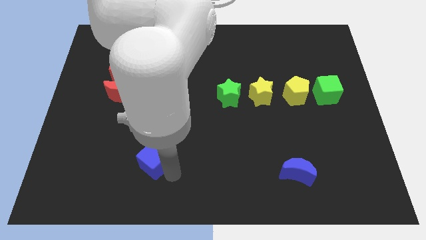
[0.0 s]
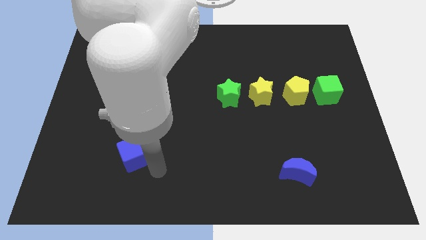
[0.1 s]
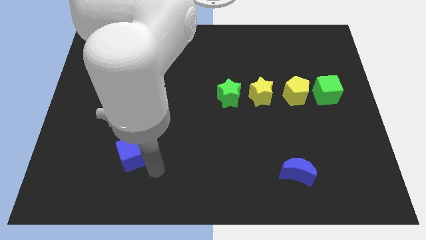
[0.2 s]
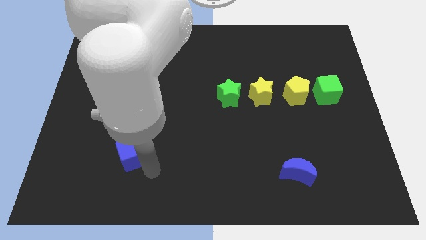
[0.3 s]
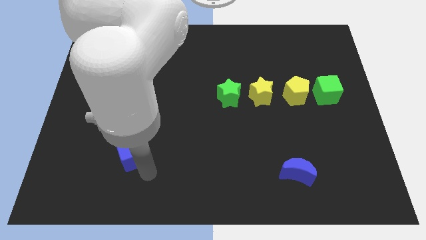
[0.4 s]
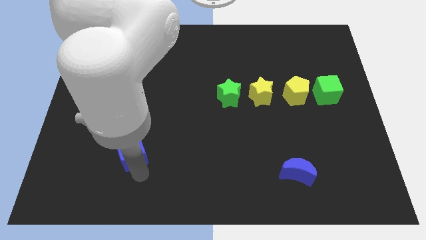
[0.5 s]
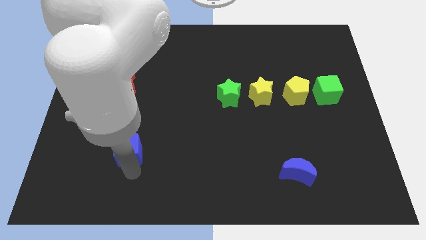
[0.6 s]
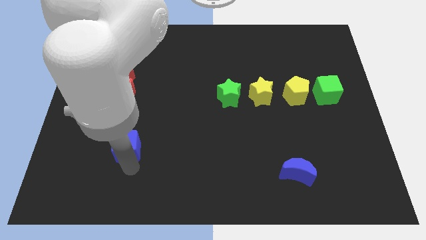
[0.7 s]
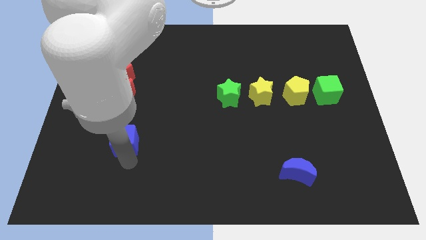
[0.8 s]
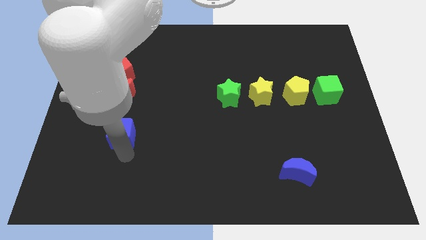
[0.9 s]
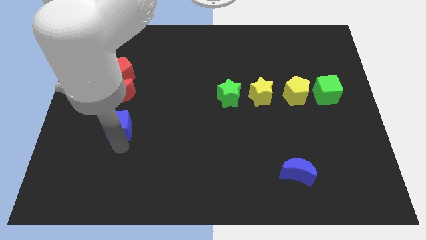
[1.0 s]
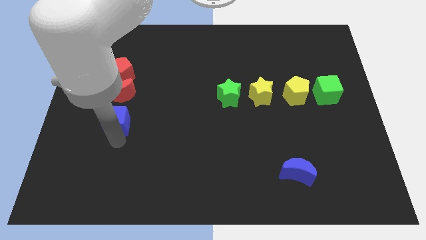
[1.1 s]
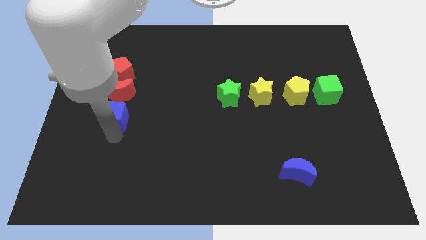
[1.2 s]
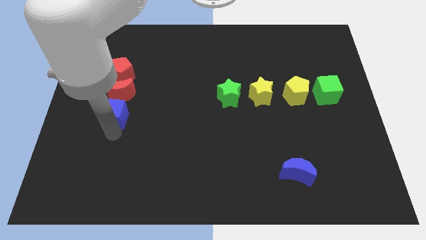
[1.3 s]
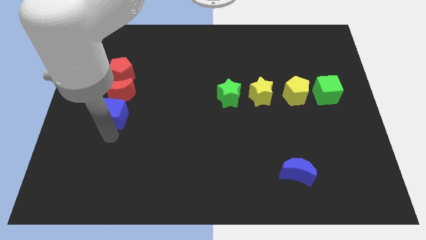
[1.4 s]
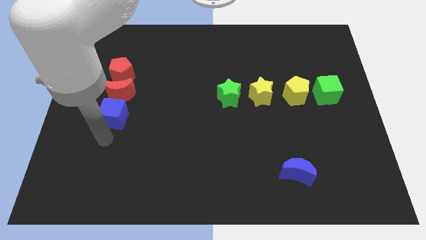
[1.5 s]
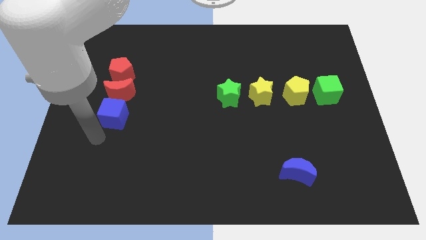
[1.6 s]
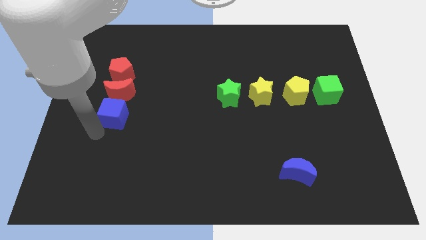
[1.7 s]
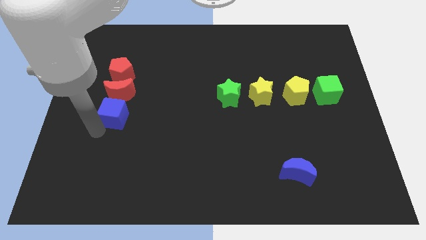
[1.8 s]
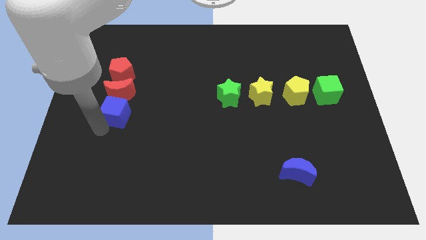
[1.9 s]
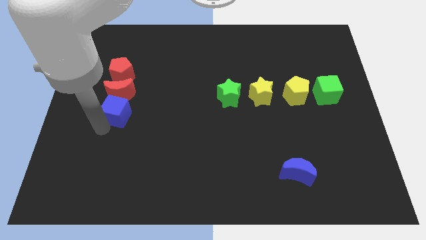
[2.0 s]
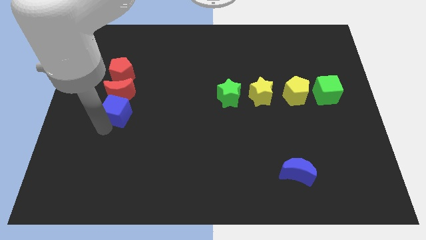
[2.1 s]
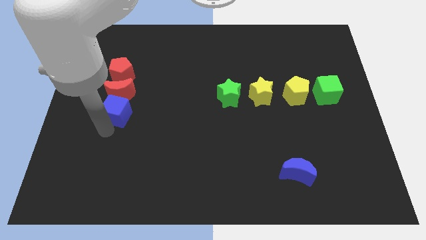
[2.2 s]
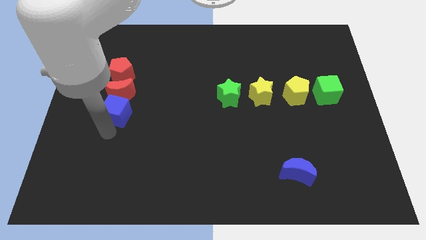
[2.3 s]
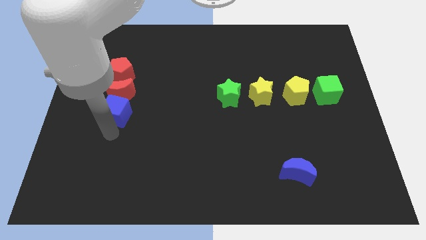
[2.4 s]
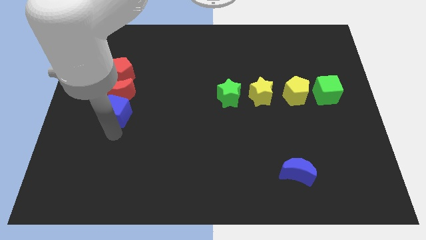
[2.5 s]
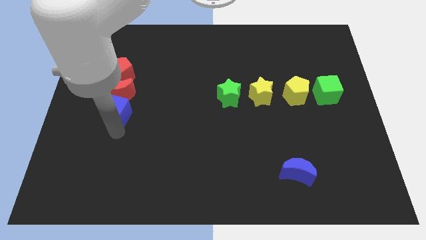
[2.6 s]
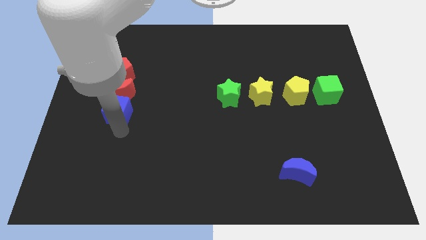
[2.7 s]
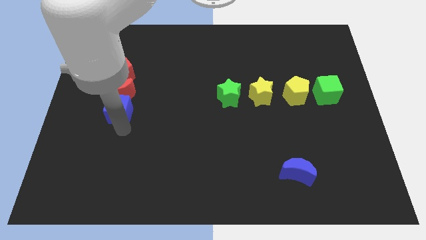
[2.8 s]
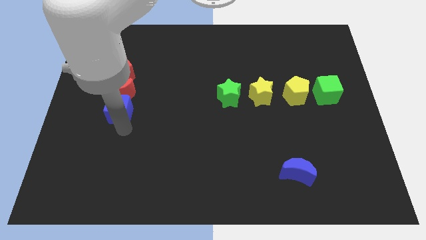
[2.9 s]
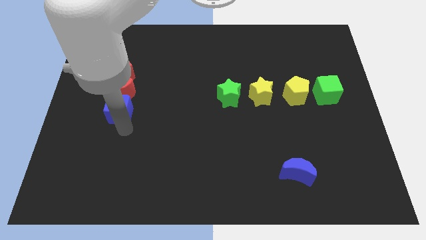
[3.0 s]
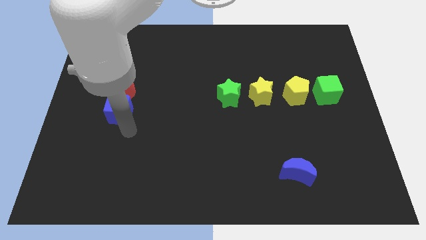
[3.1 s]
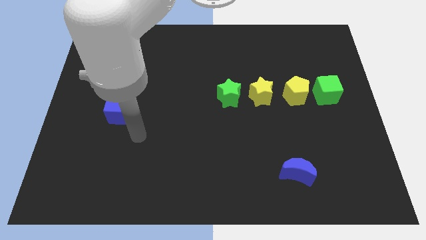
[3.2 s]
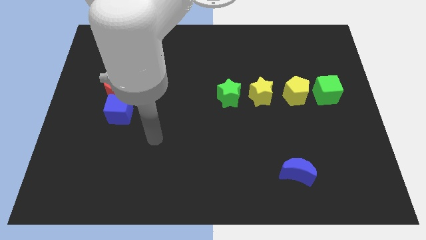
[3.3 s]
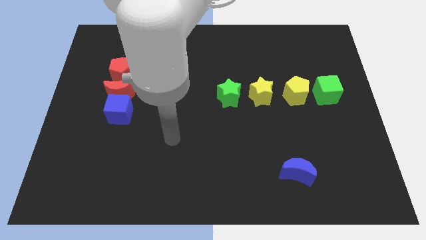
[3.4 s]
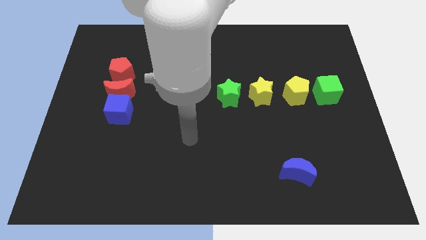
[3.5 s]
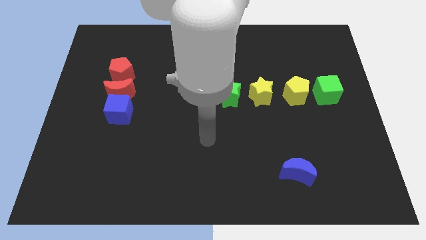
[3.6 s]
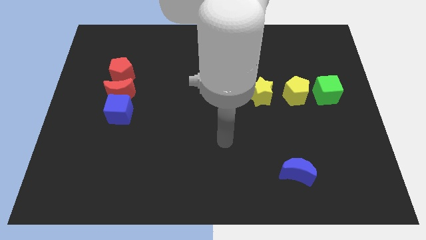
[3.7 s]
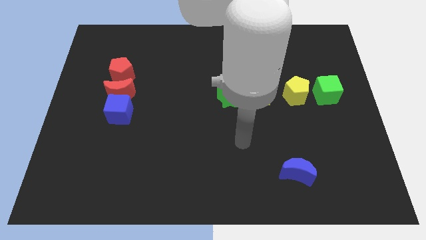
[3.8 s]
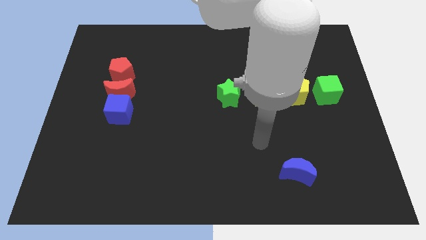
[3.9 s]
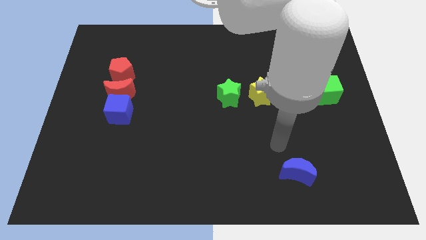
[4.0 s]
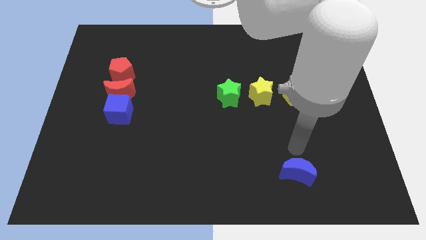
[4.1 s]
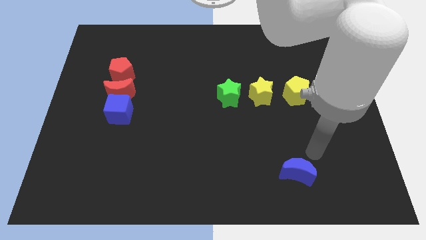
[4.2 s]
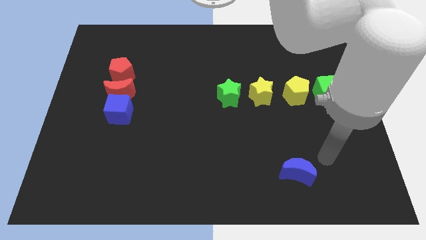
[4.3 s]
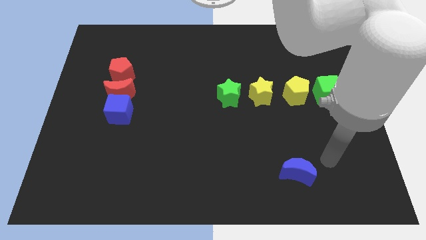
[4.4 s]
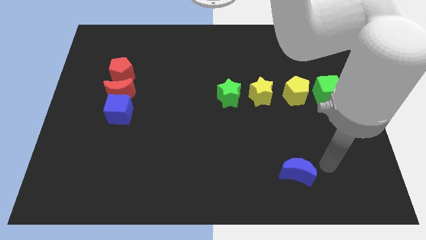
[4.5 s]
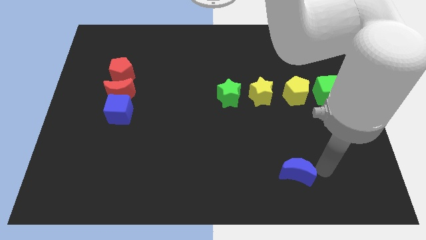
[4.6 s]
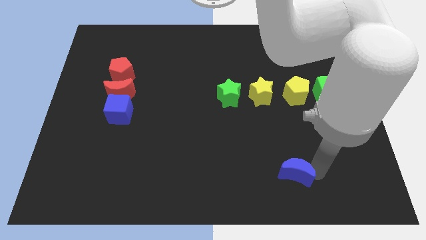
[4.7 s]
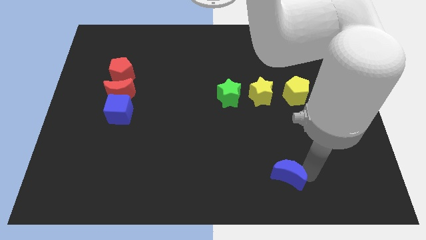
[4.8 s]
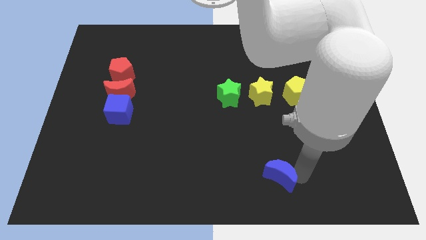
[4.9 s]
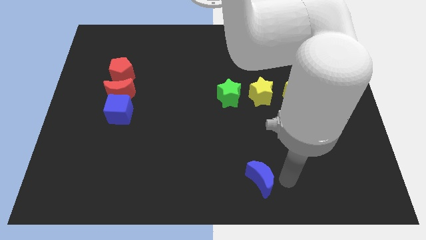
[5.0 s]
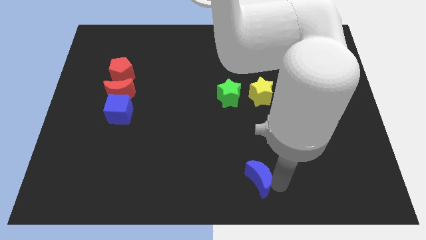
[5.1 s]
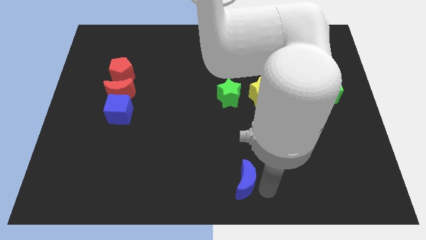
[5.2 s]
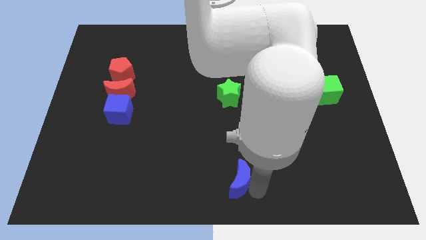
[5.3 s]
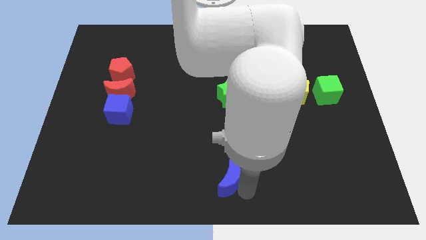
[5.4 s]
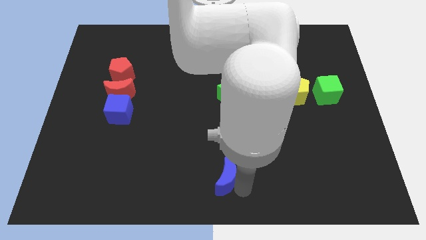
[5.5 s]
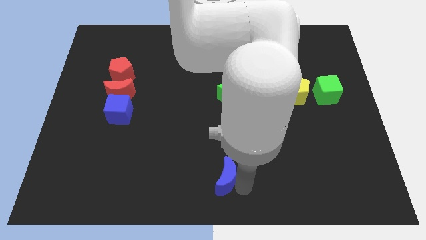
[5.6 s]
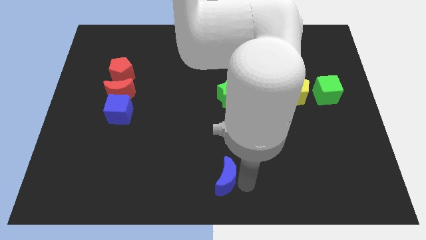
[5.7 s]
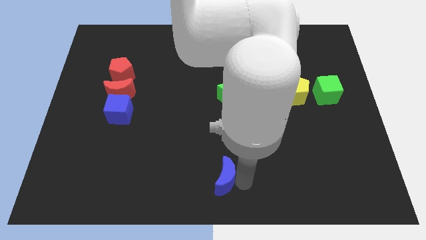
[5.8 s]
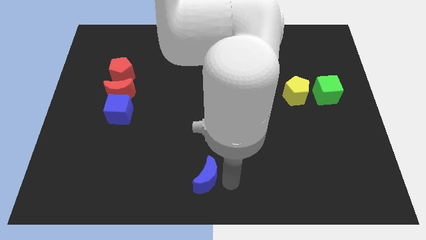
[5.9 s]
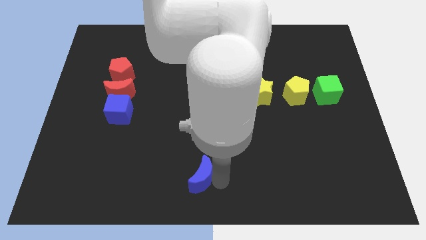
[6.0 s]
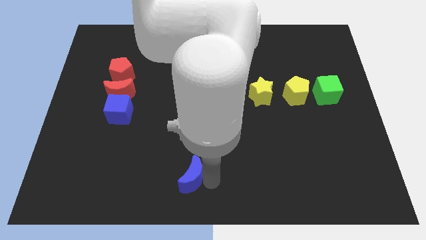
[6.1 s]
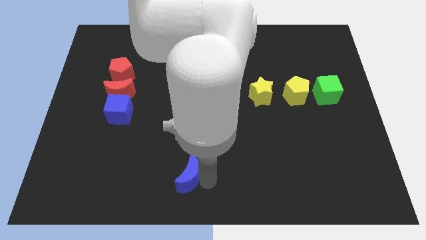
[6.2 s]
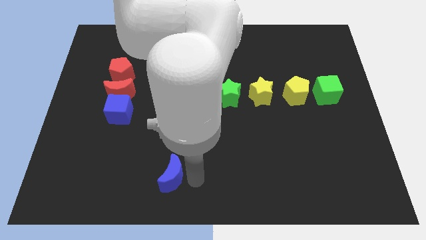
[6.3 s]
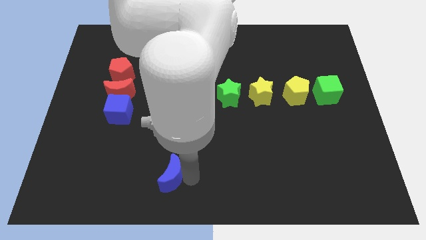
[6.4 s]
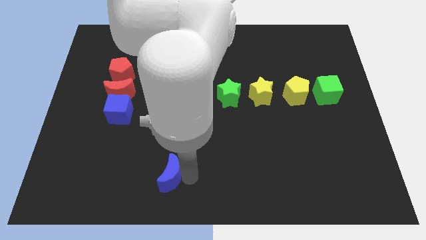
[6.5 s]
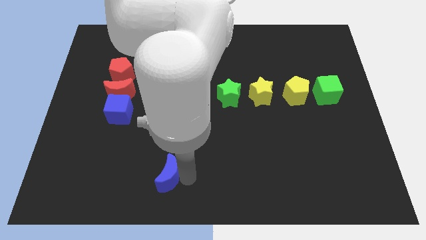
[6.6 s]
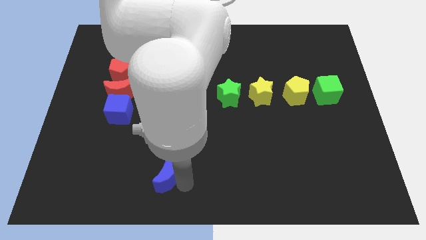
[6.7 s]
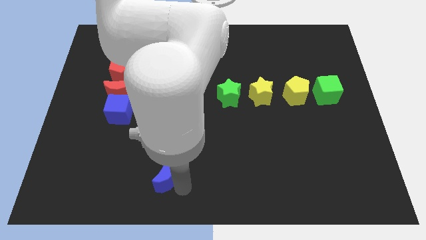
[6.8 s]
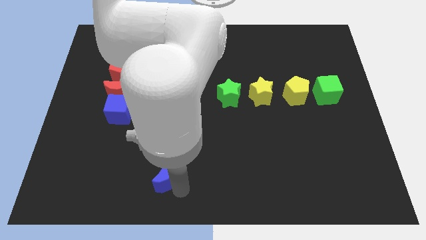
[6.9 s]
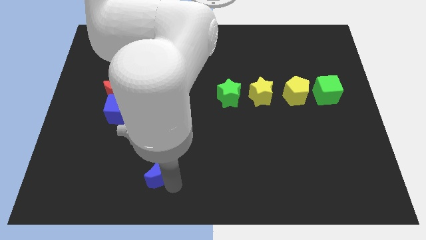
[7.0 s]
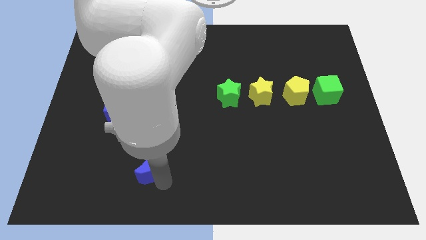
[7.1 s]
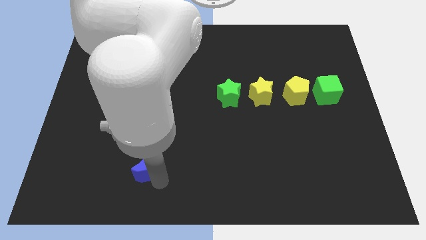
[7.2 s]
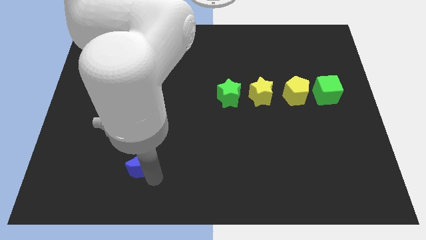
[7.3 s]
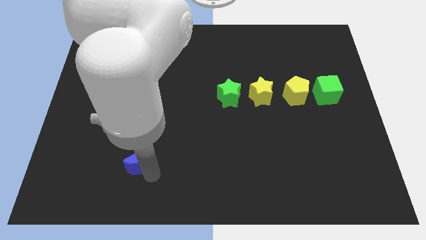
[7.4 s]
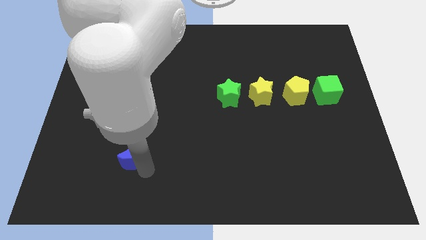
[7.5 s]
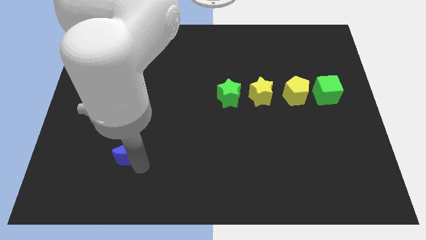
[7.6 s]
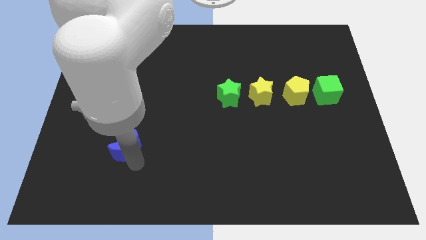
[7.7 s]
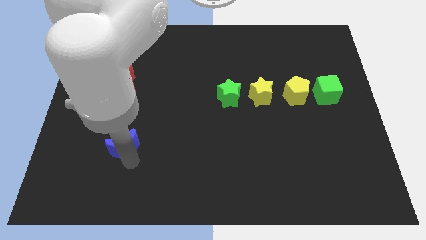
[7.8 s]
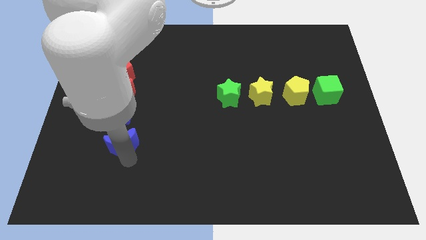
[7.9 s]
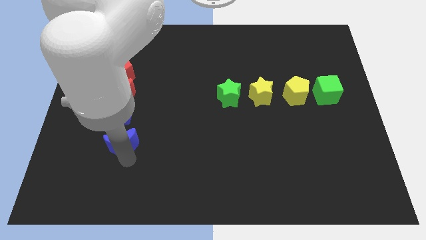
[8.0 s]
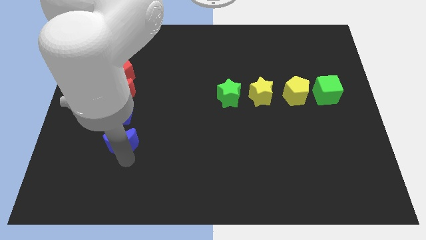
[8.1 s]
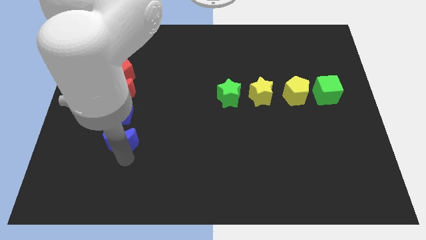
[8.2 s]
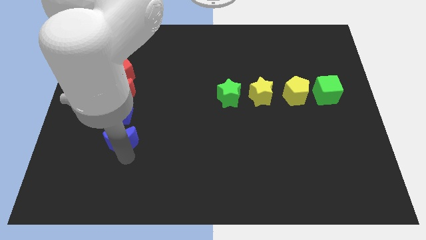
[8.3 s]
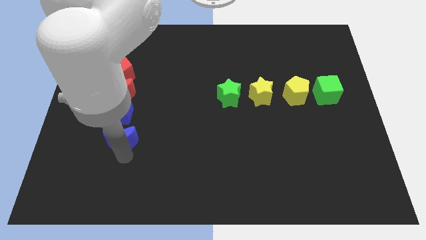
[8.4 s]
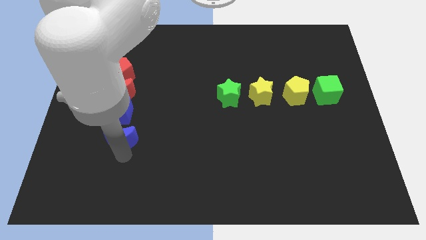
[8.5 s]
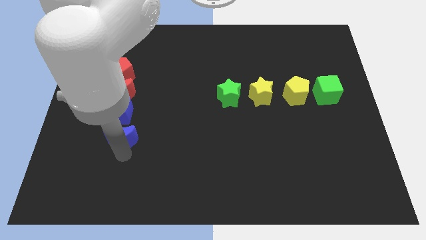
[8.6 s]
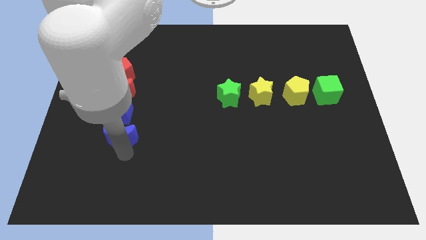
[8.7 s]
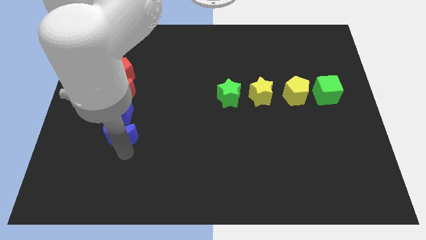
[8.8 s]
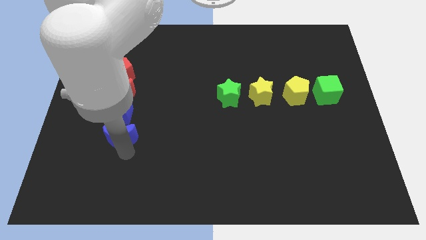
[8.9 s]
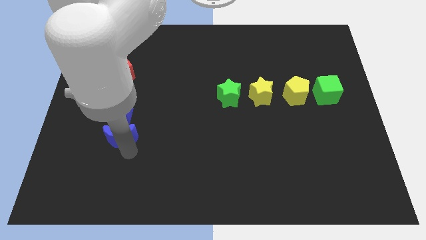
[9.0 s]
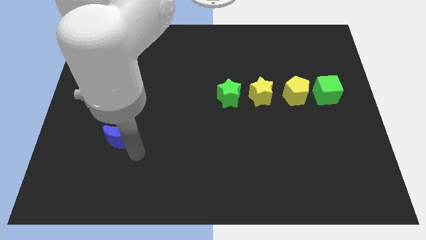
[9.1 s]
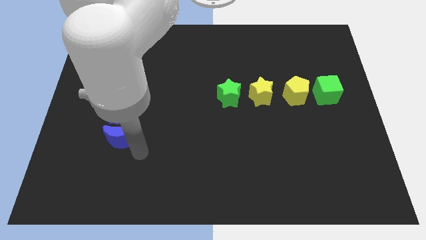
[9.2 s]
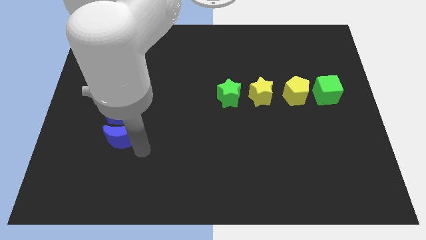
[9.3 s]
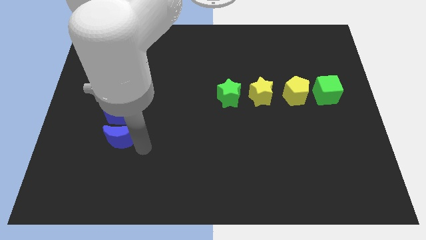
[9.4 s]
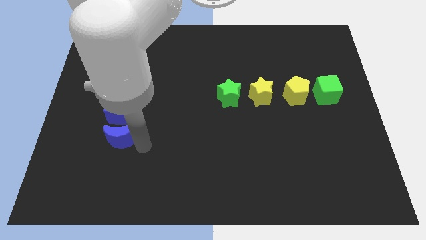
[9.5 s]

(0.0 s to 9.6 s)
place blue blocks vertically under red blocks to form a vertical row
